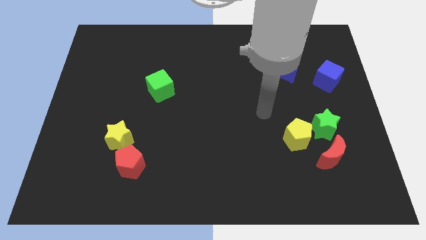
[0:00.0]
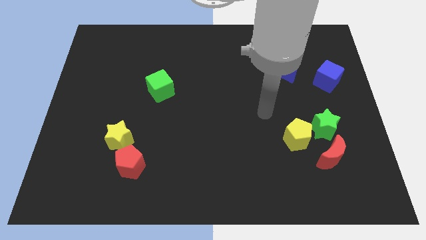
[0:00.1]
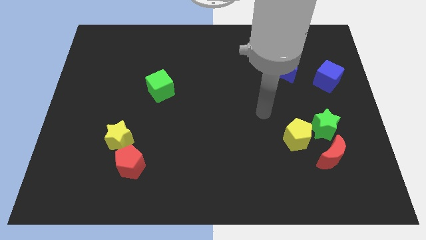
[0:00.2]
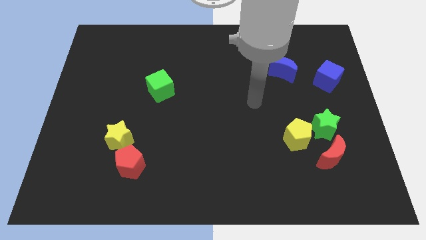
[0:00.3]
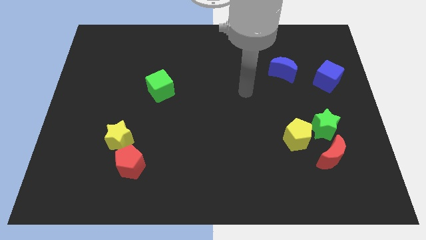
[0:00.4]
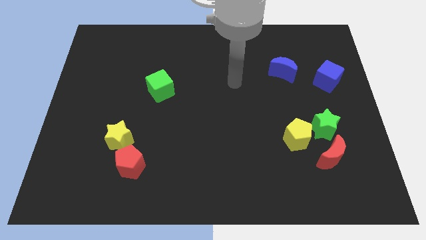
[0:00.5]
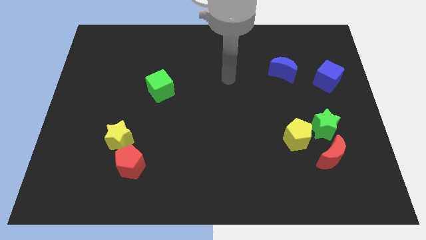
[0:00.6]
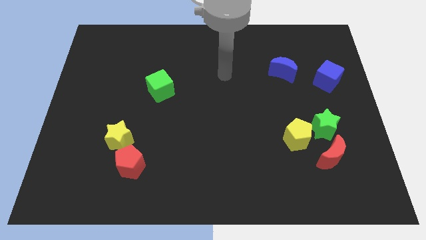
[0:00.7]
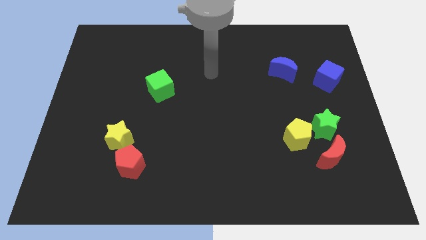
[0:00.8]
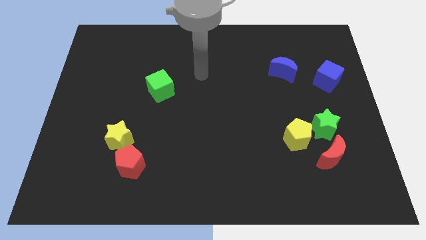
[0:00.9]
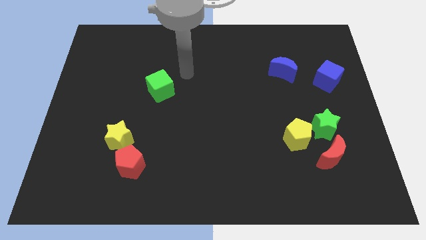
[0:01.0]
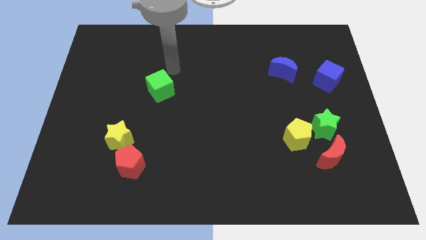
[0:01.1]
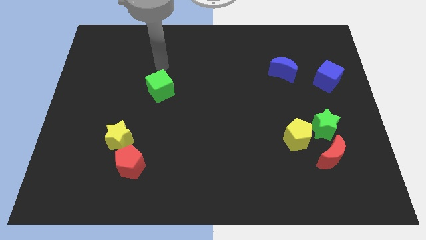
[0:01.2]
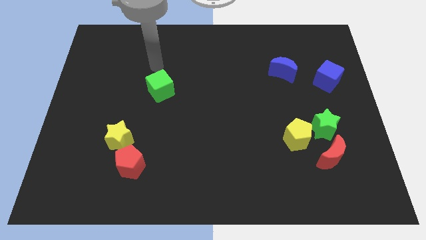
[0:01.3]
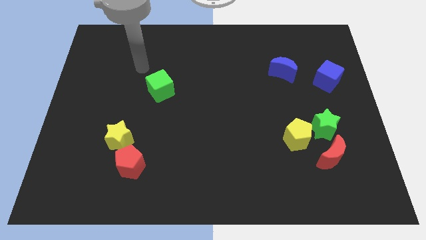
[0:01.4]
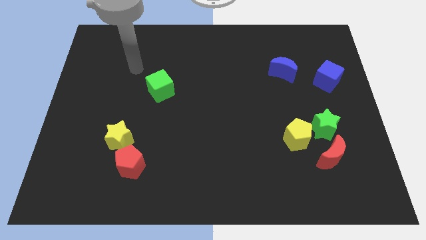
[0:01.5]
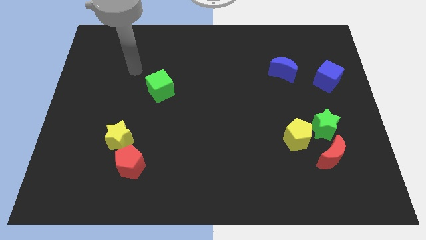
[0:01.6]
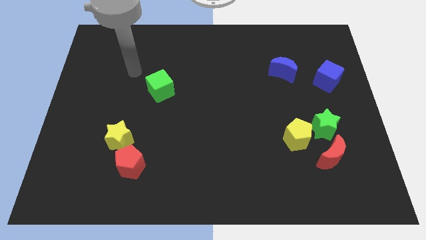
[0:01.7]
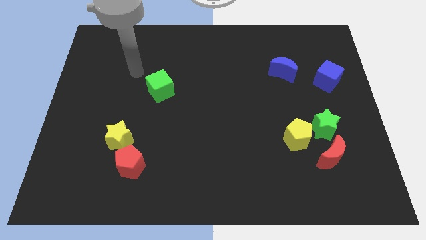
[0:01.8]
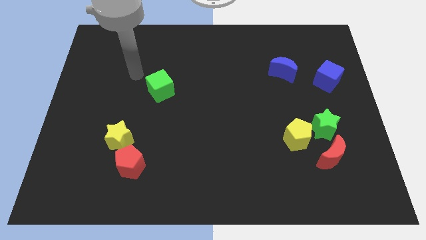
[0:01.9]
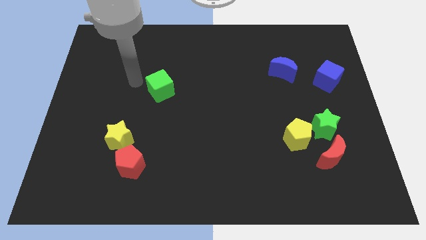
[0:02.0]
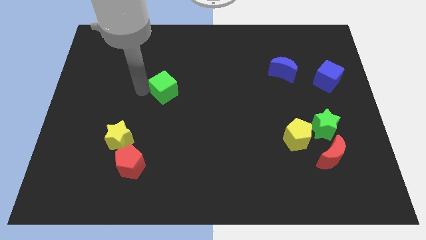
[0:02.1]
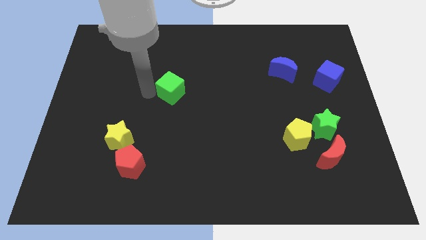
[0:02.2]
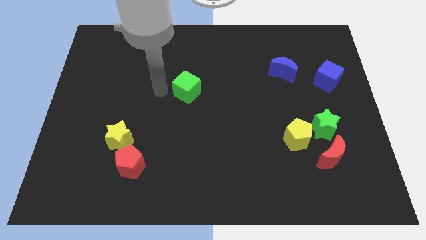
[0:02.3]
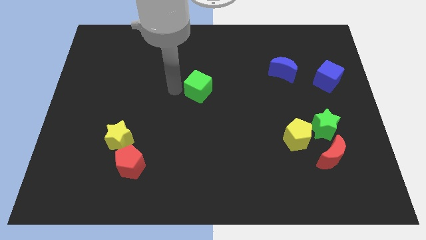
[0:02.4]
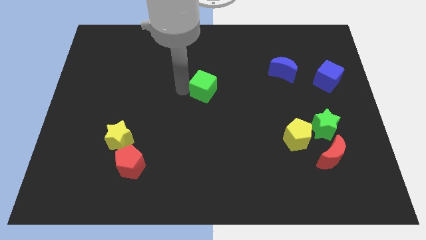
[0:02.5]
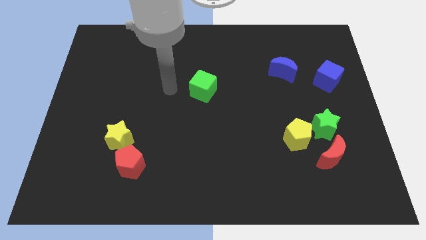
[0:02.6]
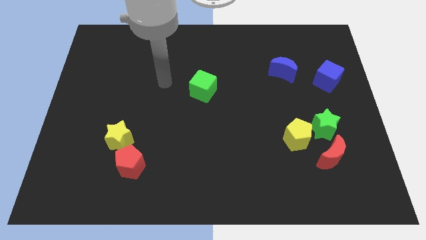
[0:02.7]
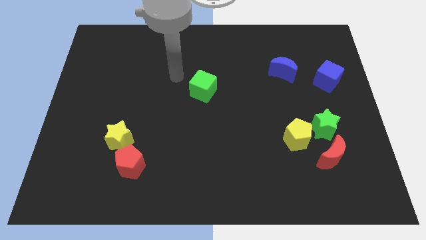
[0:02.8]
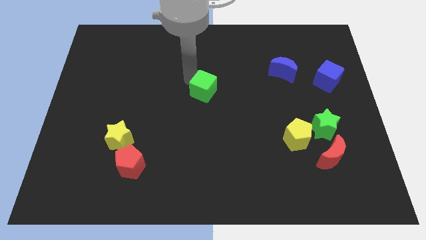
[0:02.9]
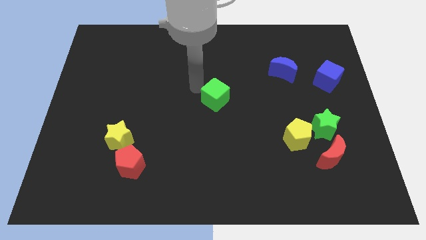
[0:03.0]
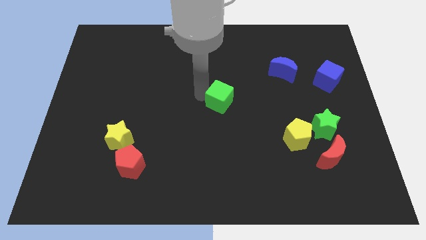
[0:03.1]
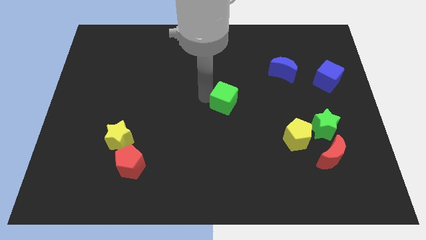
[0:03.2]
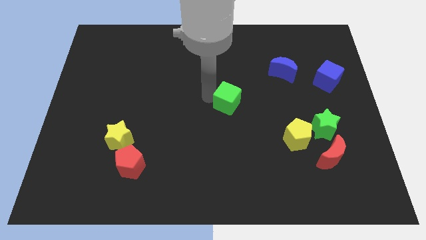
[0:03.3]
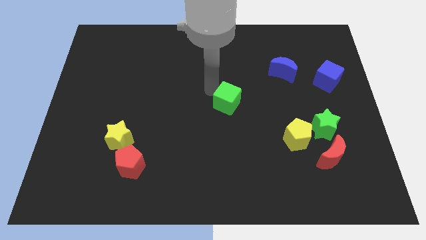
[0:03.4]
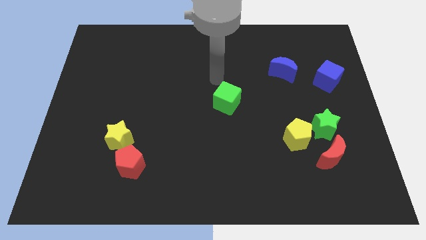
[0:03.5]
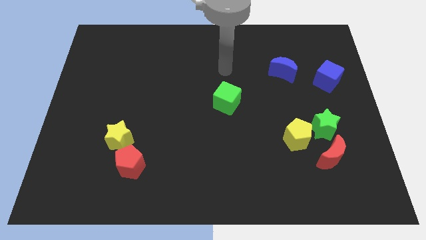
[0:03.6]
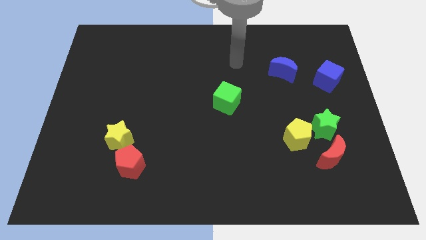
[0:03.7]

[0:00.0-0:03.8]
move the green cube diagonally to the blue moon

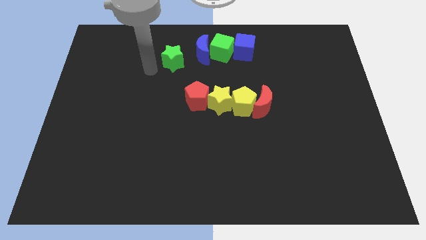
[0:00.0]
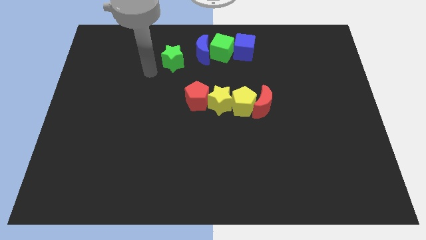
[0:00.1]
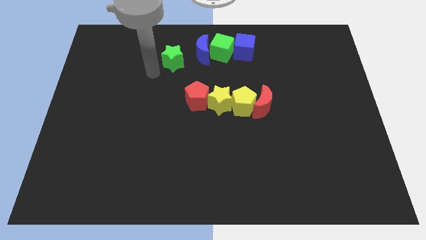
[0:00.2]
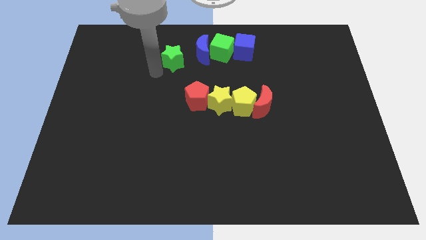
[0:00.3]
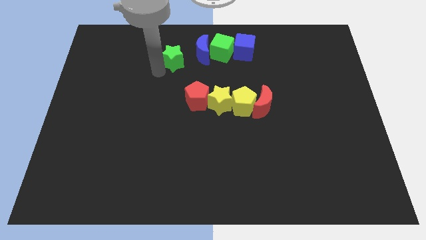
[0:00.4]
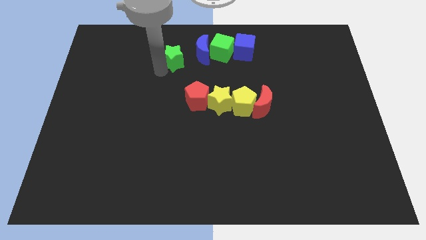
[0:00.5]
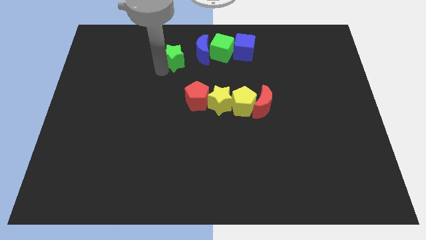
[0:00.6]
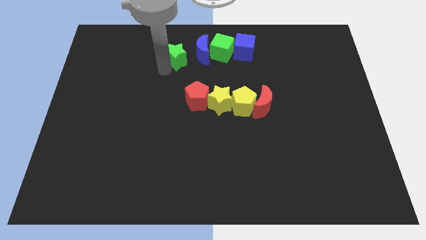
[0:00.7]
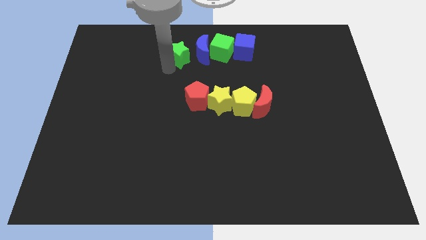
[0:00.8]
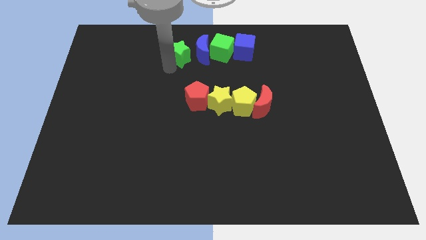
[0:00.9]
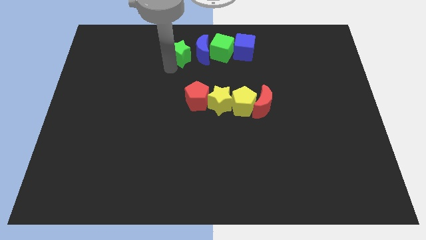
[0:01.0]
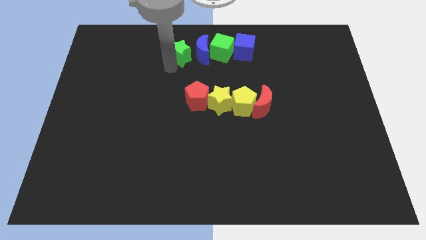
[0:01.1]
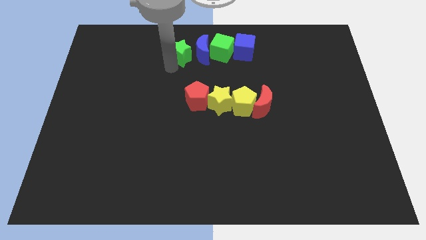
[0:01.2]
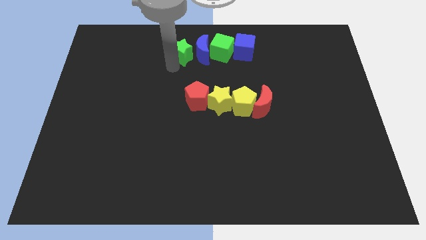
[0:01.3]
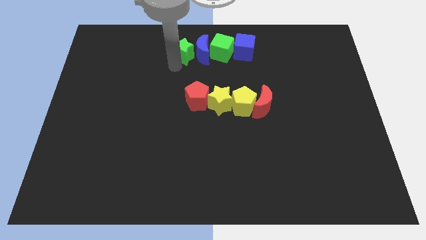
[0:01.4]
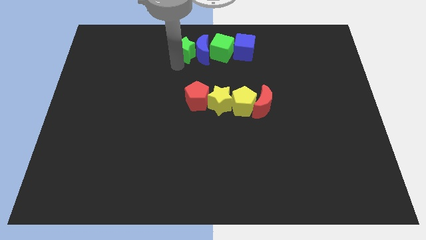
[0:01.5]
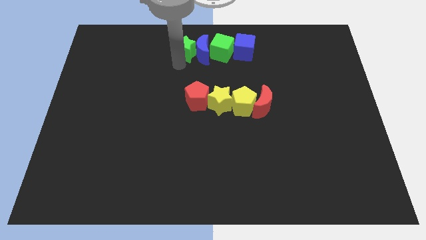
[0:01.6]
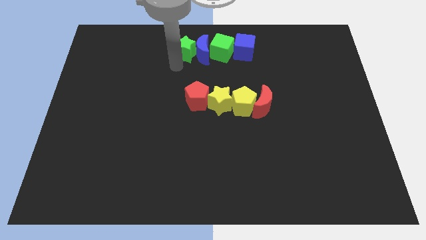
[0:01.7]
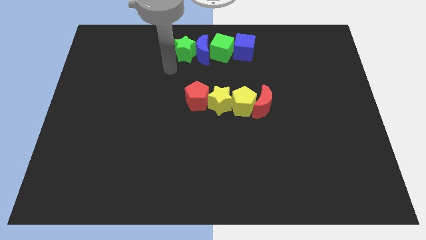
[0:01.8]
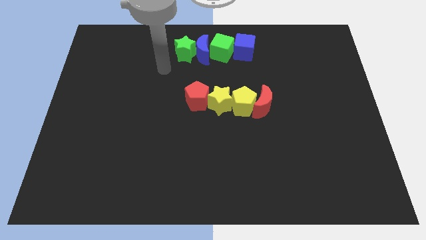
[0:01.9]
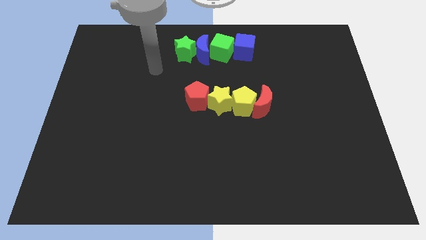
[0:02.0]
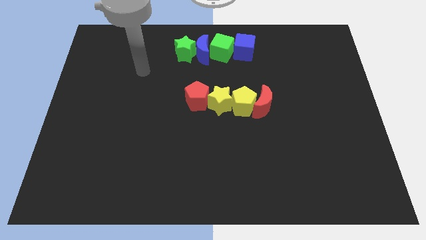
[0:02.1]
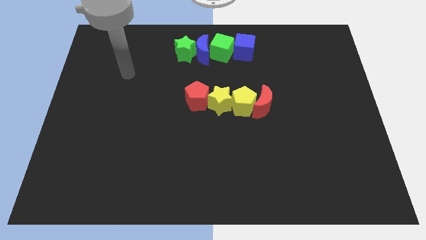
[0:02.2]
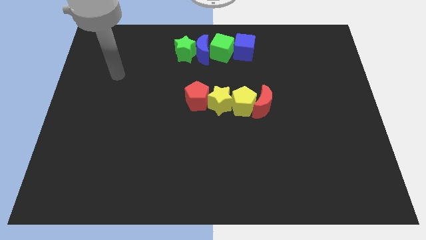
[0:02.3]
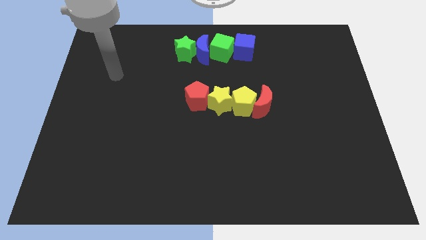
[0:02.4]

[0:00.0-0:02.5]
push the green star into blue crescent

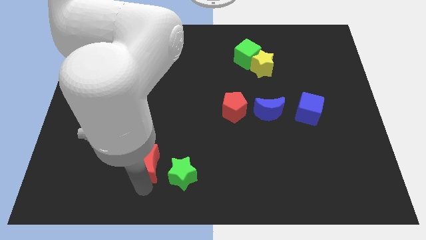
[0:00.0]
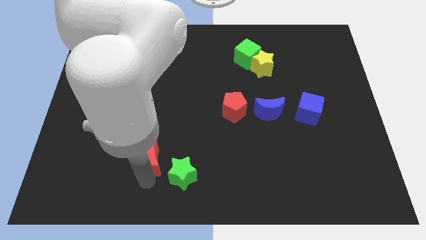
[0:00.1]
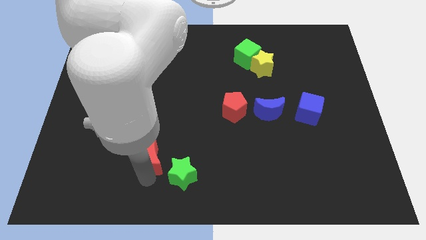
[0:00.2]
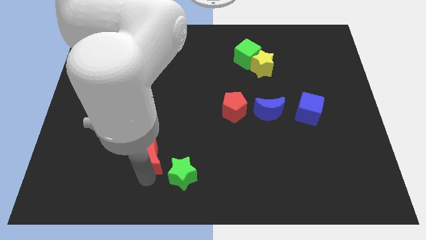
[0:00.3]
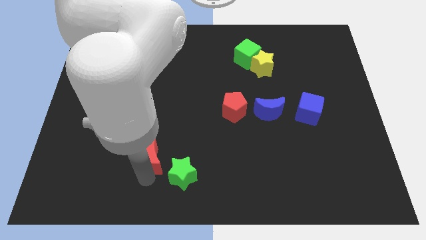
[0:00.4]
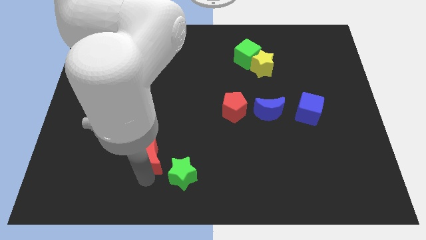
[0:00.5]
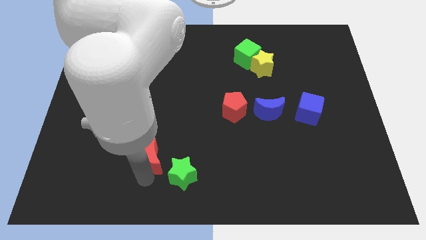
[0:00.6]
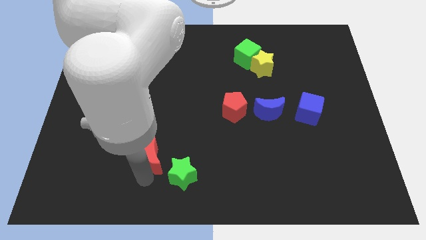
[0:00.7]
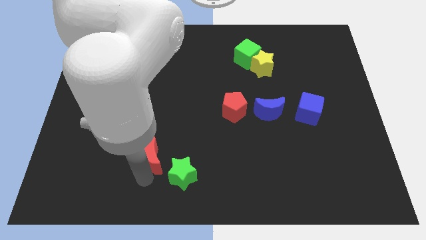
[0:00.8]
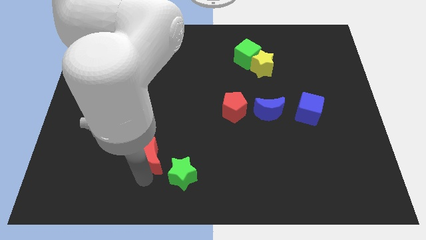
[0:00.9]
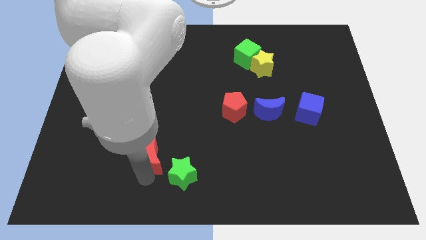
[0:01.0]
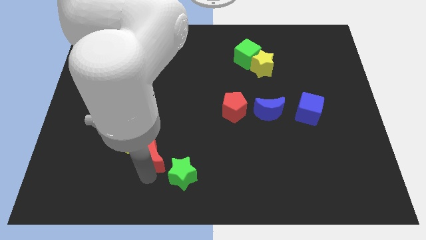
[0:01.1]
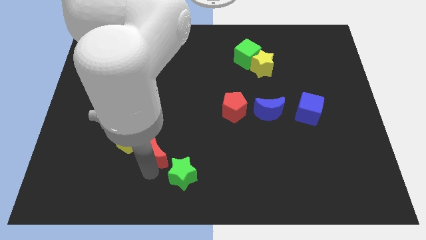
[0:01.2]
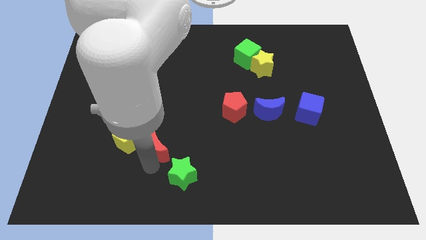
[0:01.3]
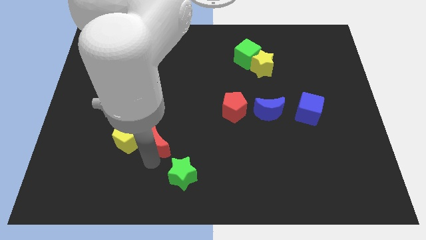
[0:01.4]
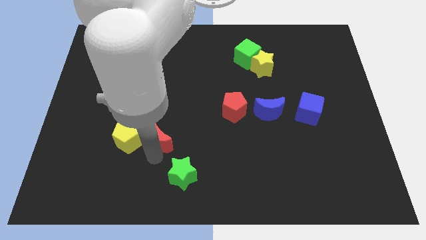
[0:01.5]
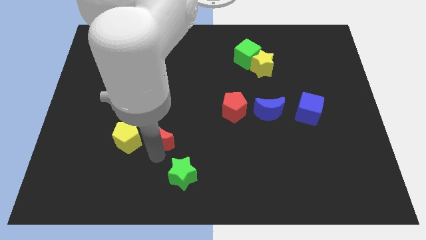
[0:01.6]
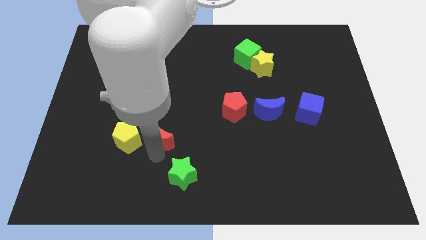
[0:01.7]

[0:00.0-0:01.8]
place the red moon at the top left side of the green star

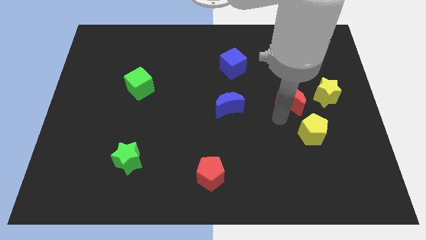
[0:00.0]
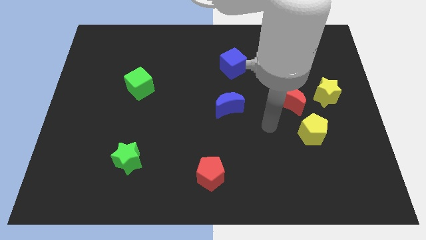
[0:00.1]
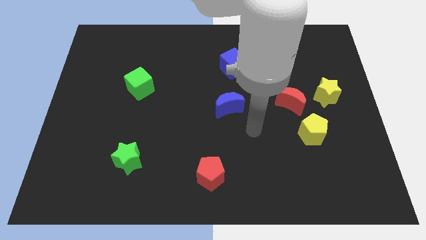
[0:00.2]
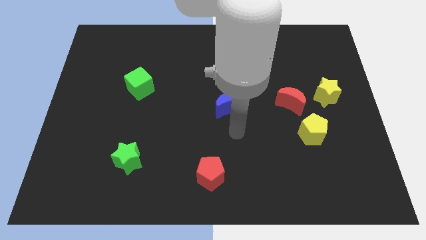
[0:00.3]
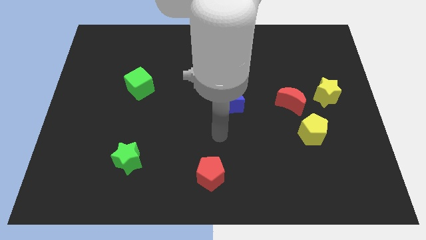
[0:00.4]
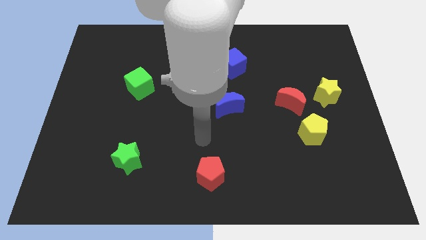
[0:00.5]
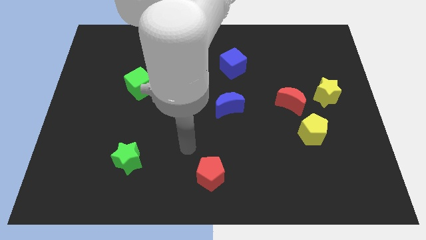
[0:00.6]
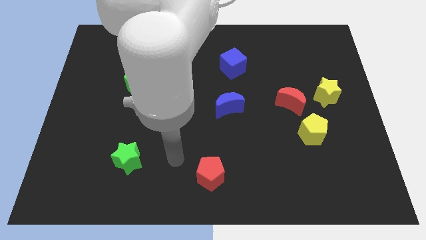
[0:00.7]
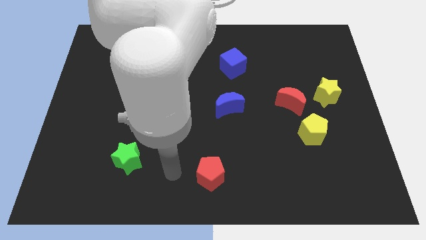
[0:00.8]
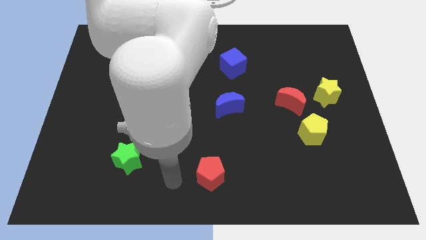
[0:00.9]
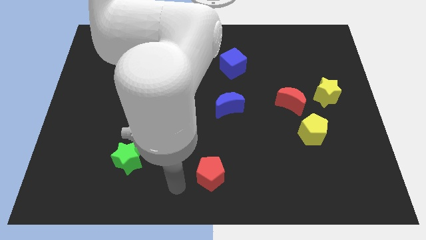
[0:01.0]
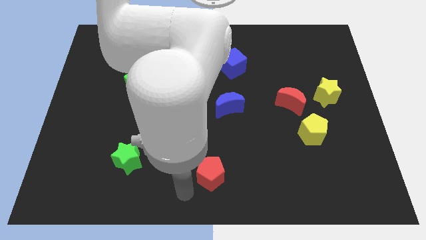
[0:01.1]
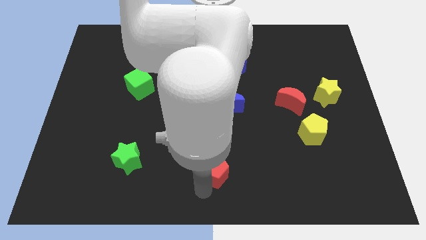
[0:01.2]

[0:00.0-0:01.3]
move the arm to the bottom center of the board
